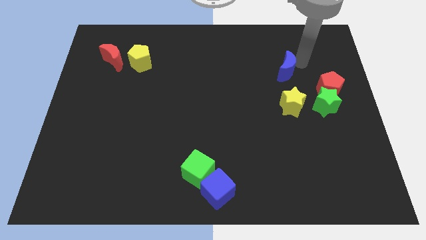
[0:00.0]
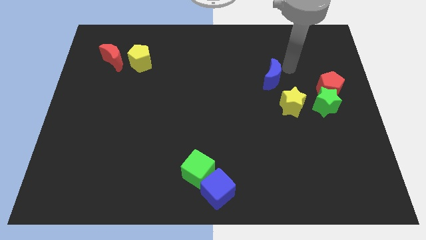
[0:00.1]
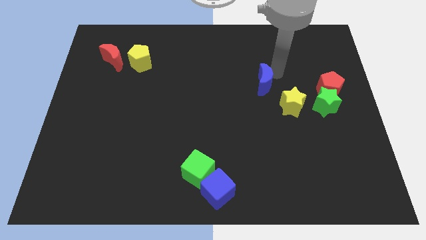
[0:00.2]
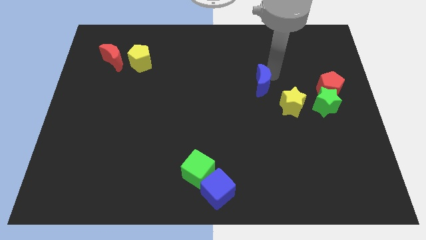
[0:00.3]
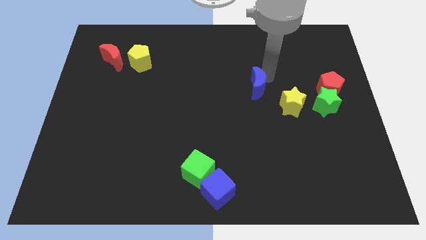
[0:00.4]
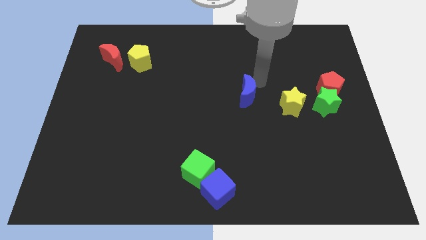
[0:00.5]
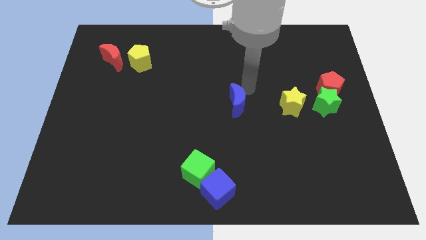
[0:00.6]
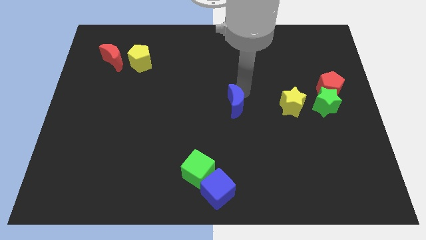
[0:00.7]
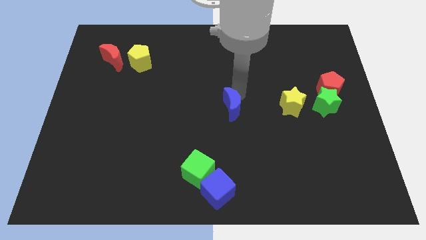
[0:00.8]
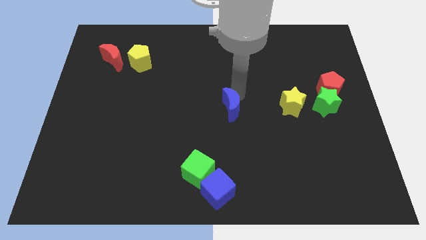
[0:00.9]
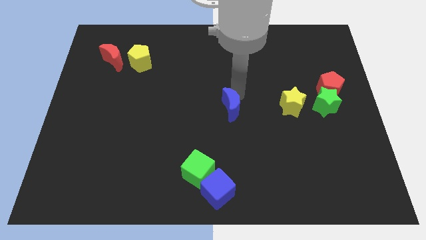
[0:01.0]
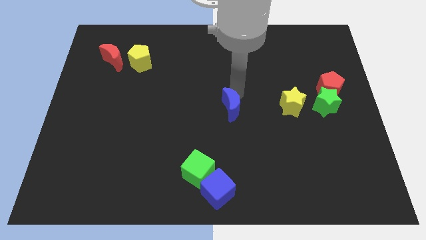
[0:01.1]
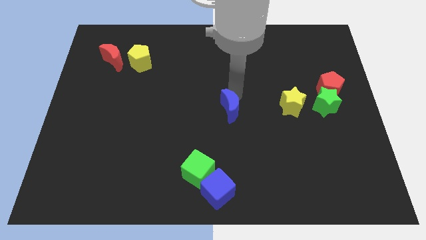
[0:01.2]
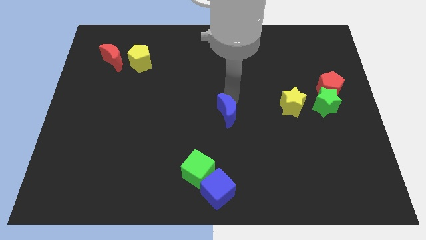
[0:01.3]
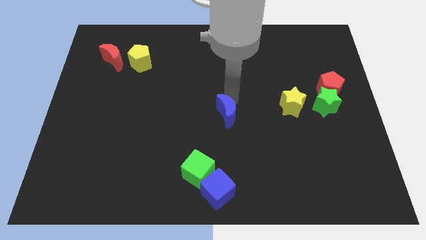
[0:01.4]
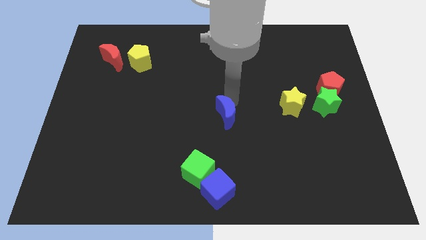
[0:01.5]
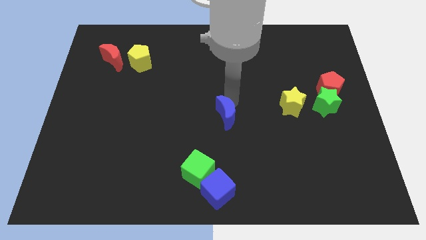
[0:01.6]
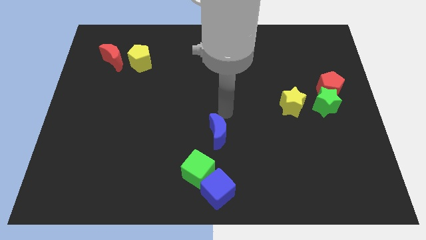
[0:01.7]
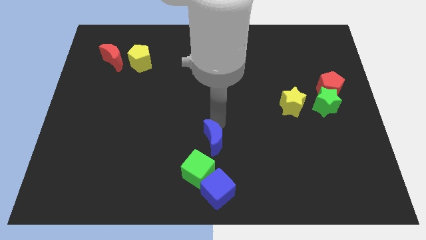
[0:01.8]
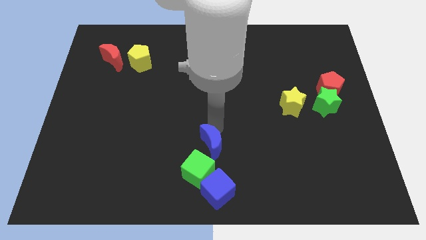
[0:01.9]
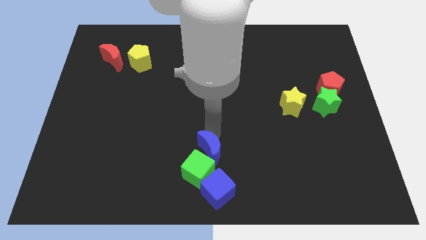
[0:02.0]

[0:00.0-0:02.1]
place blue crescent above to the green cube

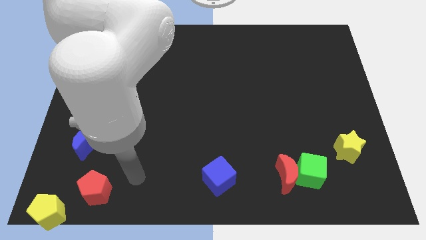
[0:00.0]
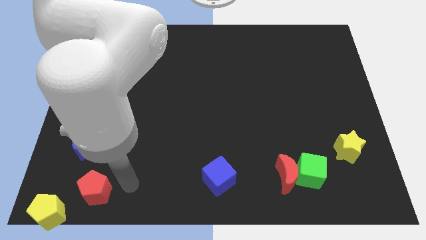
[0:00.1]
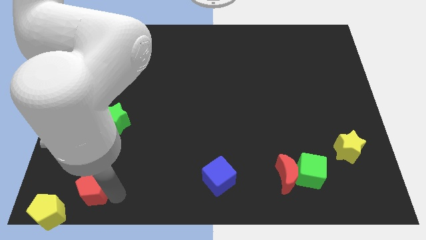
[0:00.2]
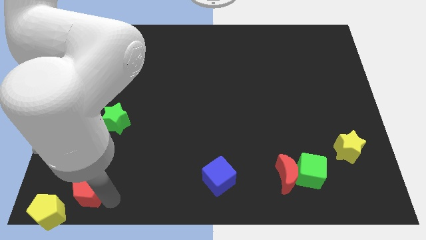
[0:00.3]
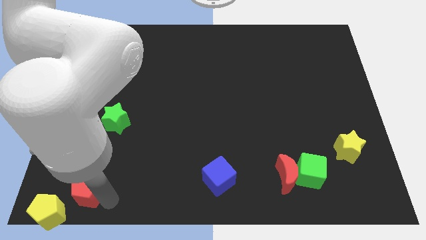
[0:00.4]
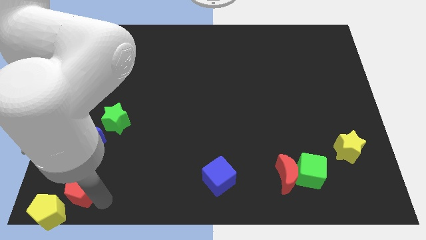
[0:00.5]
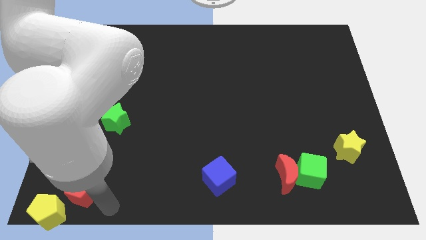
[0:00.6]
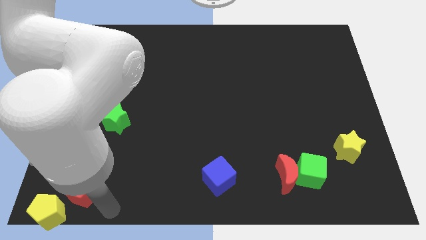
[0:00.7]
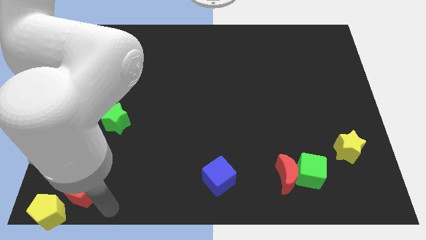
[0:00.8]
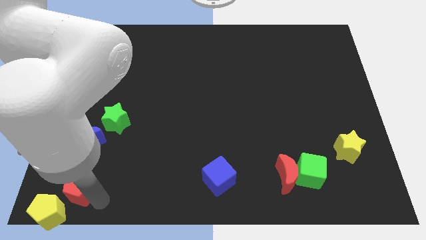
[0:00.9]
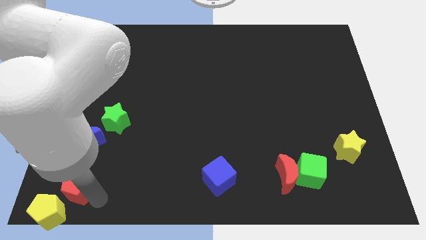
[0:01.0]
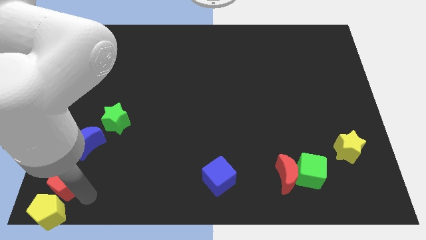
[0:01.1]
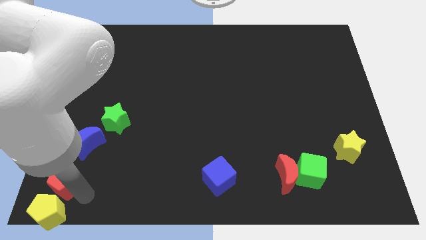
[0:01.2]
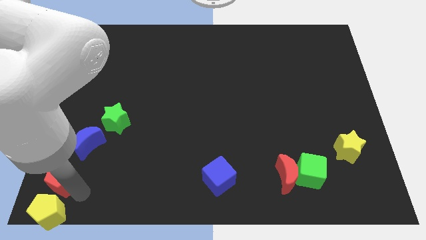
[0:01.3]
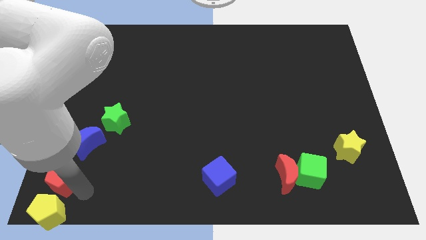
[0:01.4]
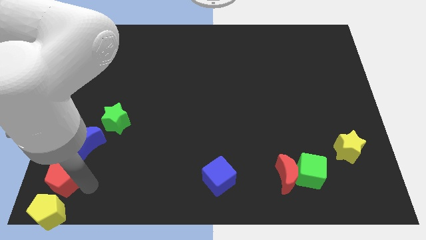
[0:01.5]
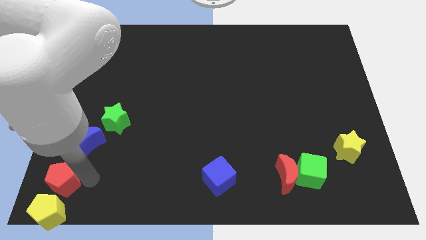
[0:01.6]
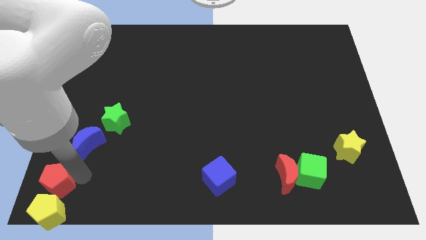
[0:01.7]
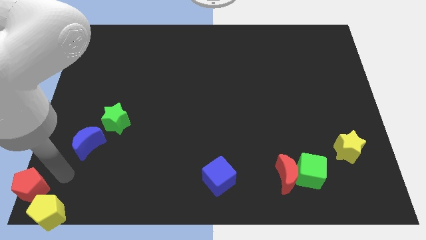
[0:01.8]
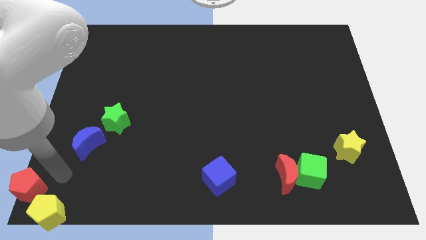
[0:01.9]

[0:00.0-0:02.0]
push the red pentagon to the bottom left corner of the board

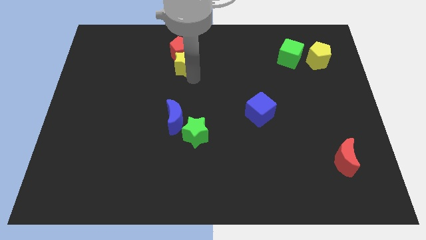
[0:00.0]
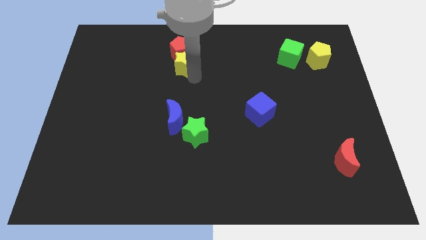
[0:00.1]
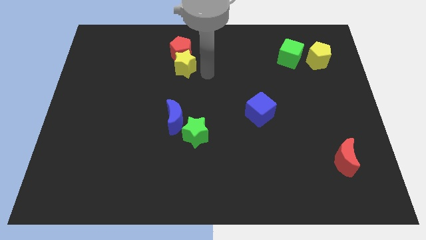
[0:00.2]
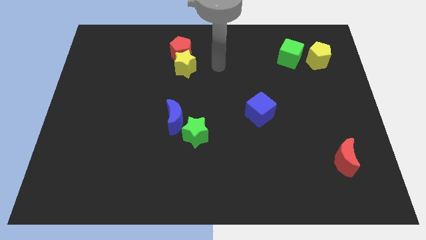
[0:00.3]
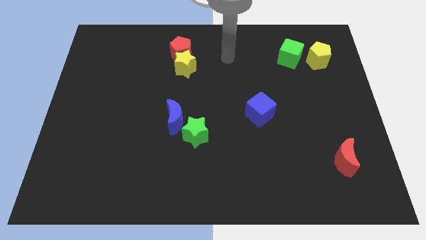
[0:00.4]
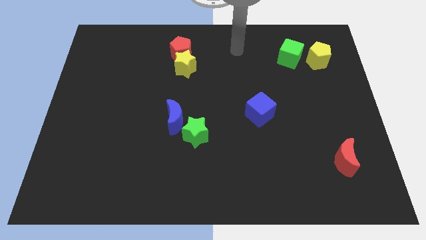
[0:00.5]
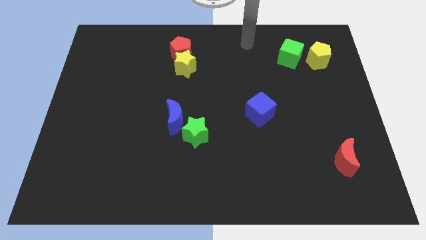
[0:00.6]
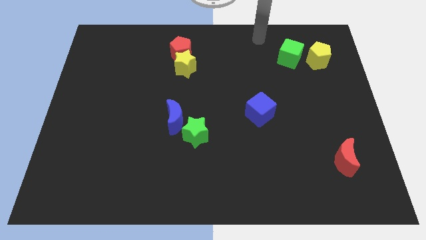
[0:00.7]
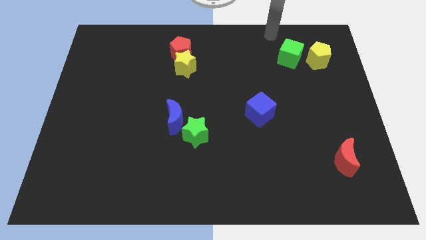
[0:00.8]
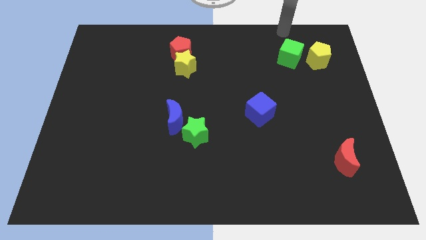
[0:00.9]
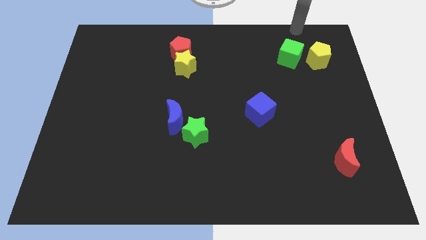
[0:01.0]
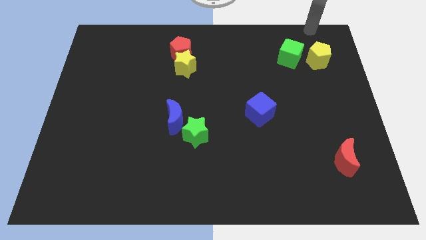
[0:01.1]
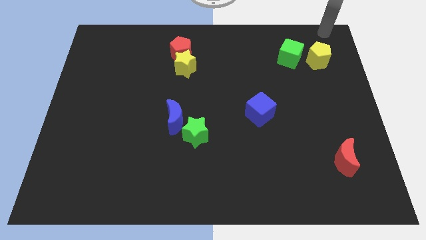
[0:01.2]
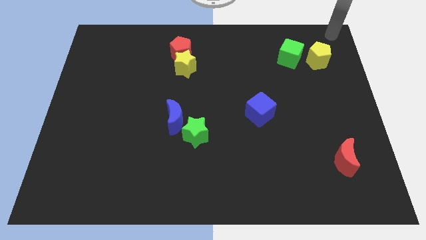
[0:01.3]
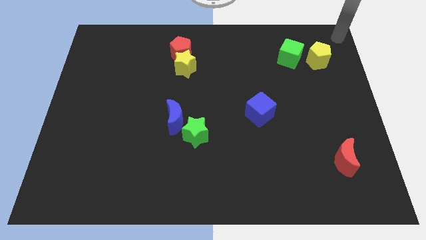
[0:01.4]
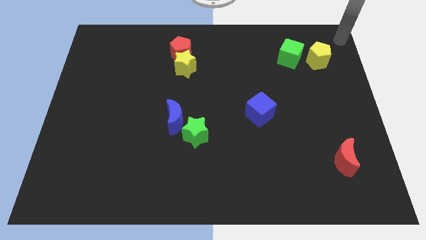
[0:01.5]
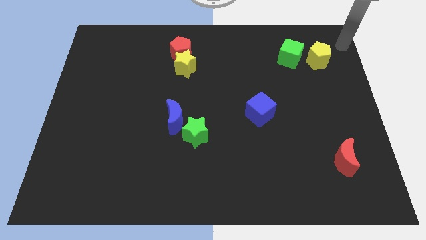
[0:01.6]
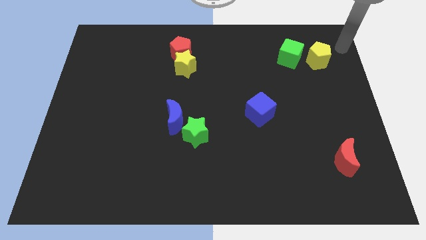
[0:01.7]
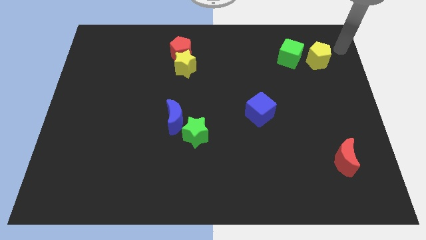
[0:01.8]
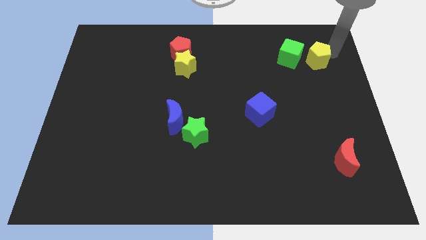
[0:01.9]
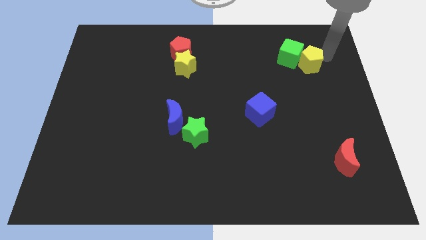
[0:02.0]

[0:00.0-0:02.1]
move the hand near to the yellow pentagon

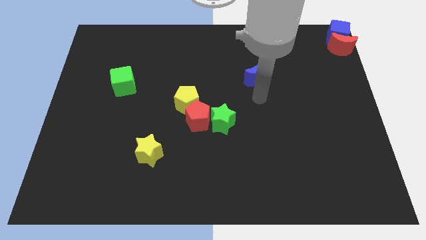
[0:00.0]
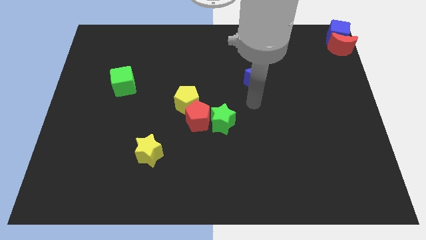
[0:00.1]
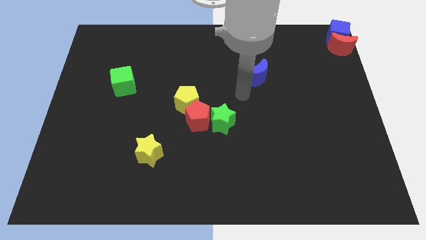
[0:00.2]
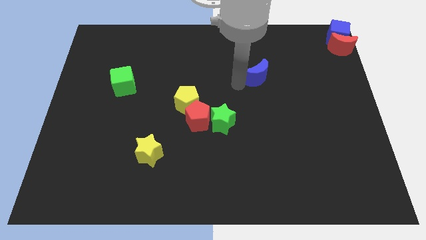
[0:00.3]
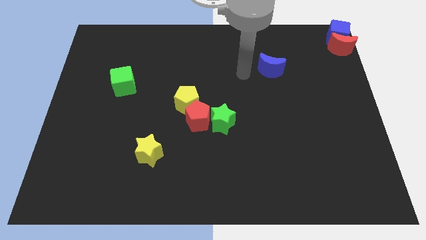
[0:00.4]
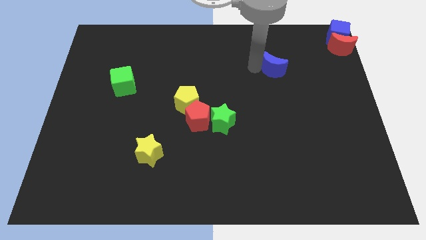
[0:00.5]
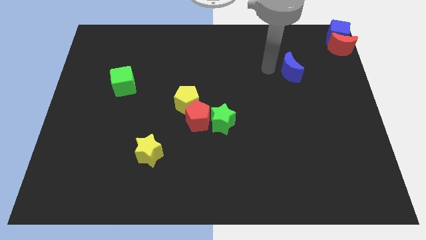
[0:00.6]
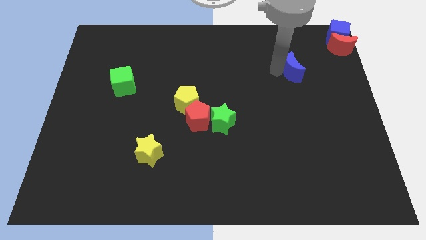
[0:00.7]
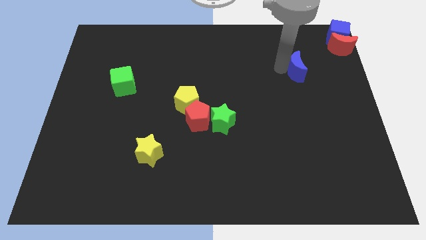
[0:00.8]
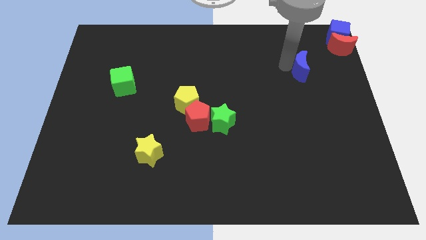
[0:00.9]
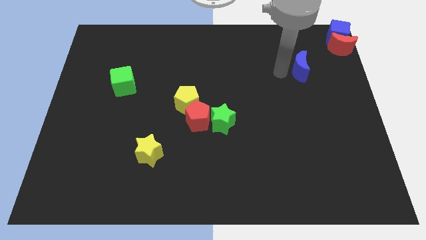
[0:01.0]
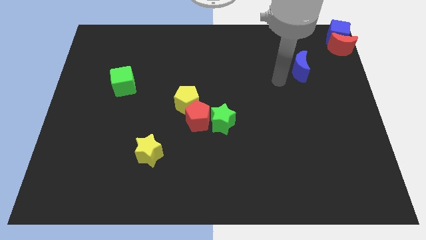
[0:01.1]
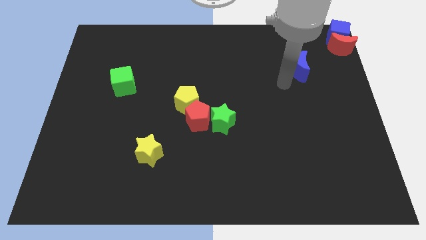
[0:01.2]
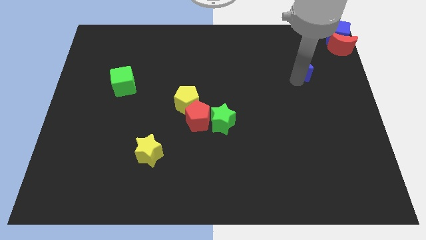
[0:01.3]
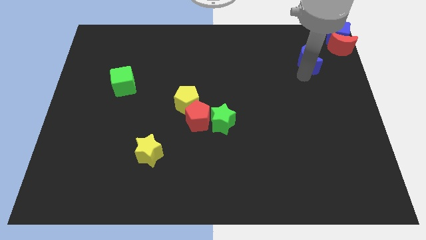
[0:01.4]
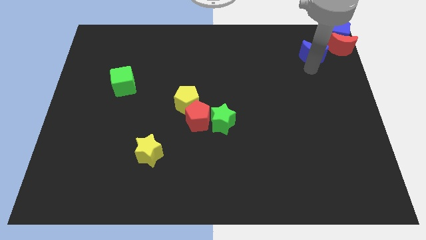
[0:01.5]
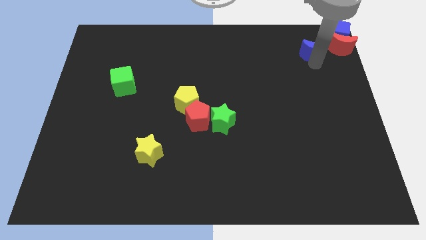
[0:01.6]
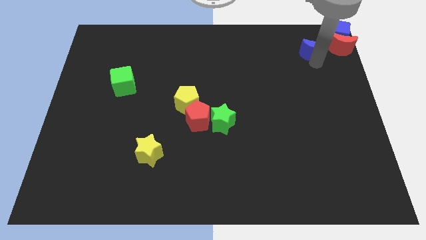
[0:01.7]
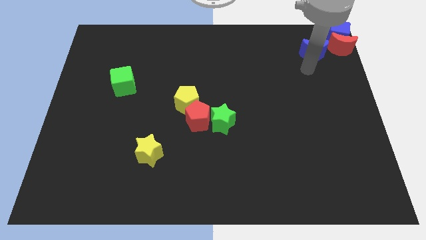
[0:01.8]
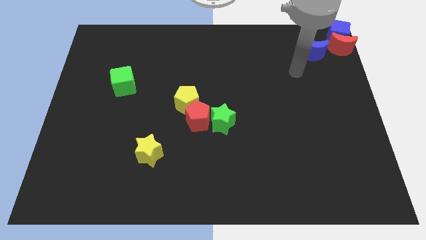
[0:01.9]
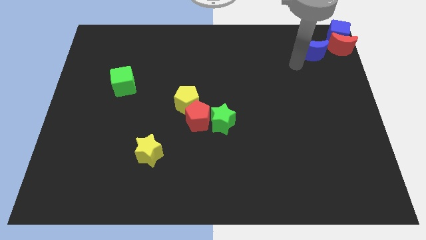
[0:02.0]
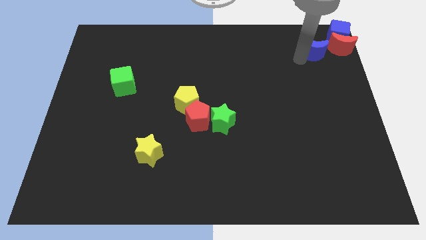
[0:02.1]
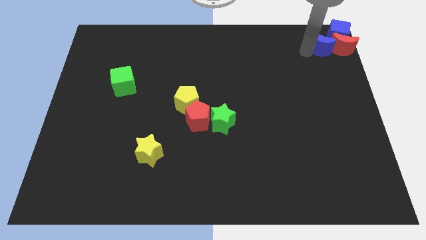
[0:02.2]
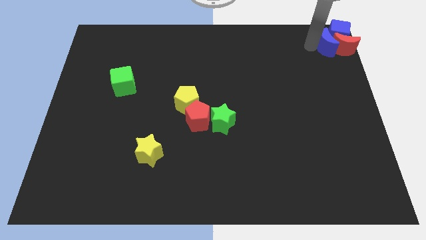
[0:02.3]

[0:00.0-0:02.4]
move the blue crescent into red moon

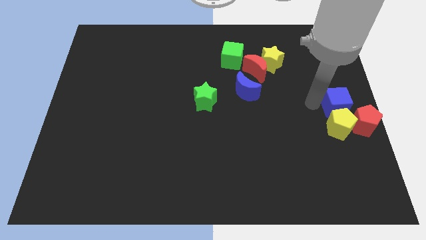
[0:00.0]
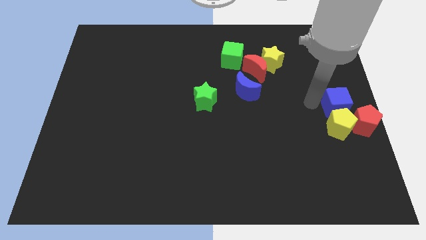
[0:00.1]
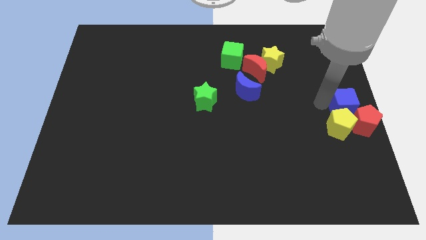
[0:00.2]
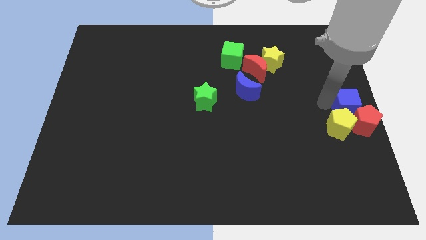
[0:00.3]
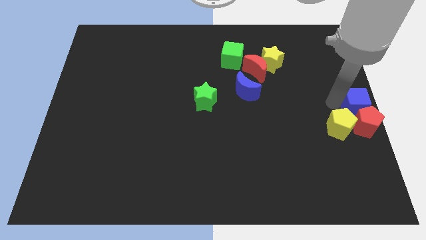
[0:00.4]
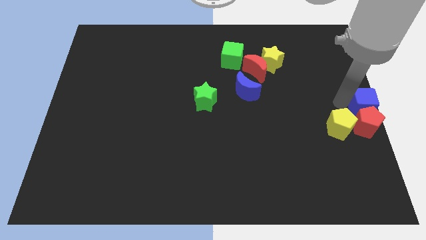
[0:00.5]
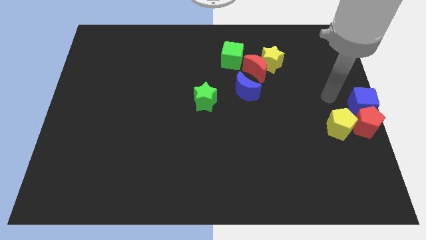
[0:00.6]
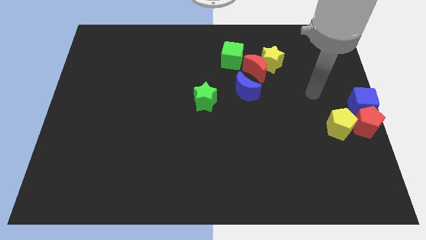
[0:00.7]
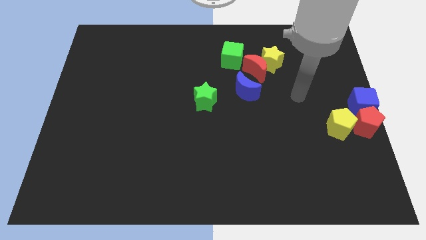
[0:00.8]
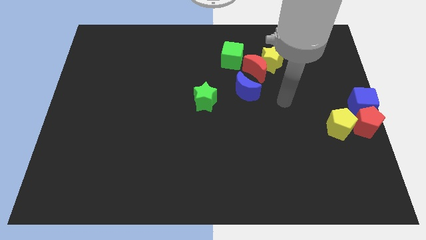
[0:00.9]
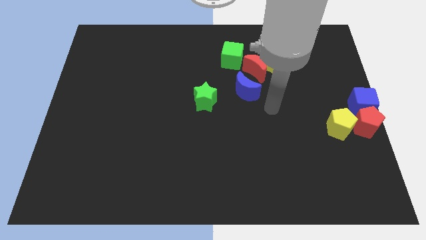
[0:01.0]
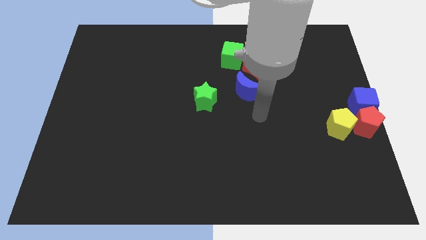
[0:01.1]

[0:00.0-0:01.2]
push the blue cube into the red pentagon
